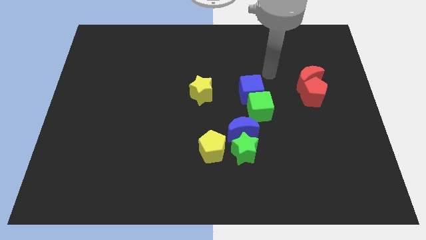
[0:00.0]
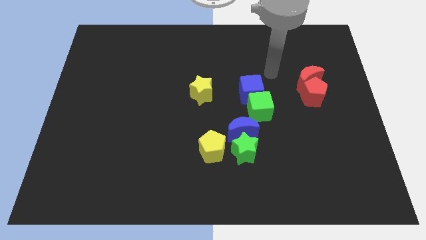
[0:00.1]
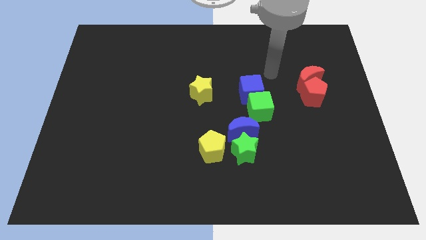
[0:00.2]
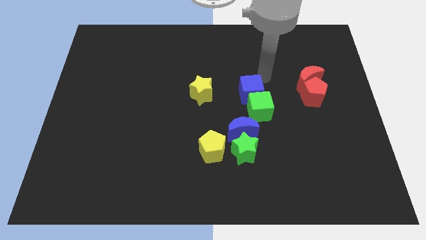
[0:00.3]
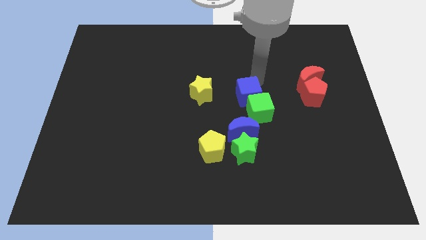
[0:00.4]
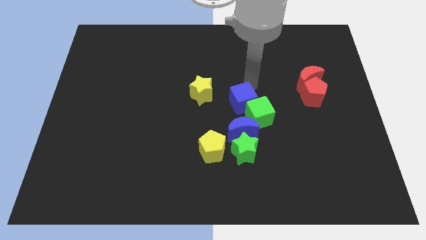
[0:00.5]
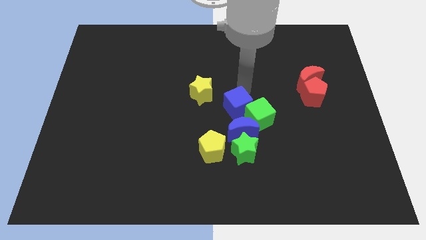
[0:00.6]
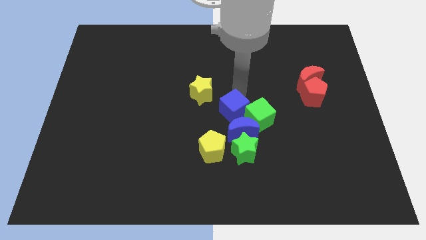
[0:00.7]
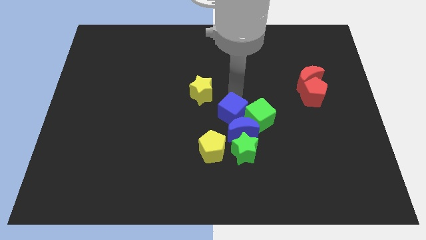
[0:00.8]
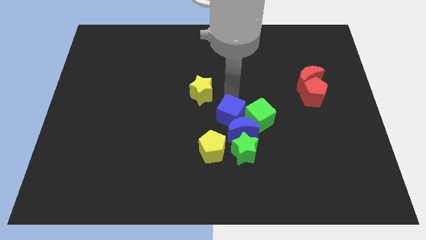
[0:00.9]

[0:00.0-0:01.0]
move the blue cube to the top of the blue crescent

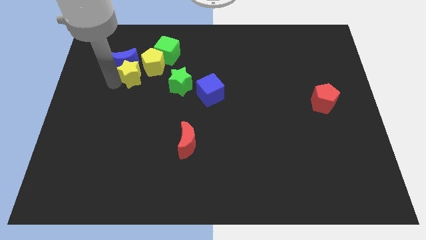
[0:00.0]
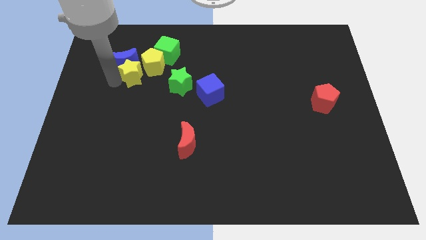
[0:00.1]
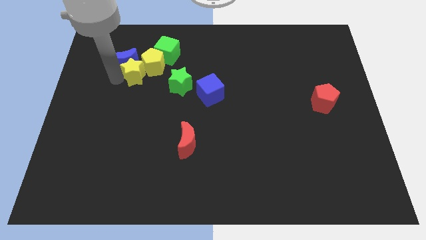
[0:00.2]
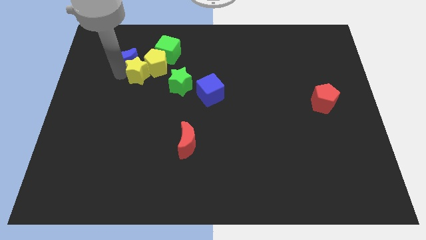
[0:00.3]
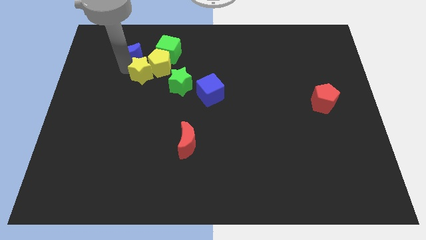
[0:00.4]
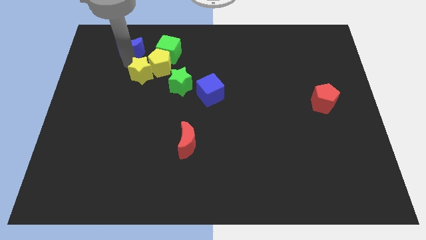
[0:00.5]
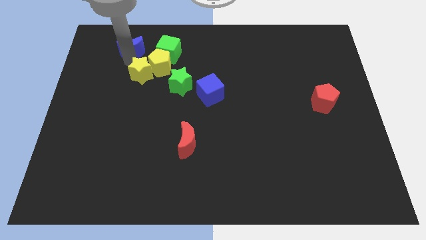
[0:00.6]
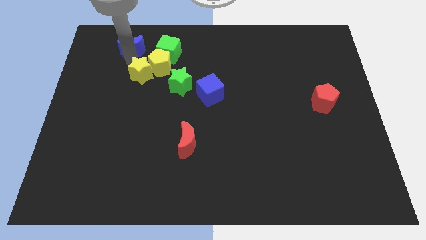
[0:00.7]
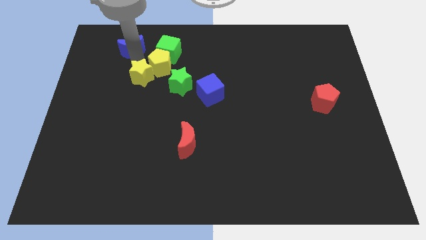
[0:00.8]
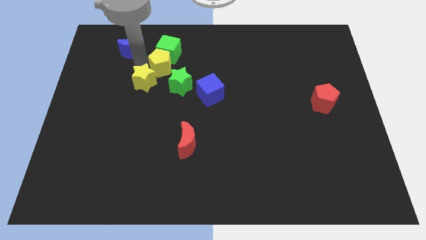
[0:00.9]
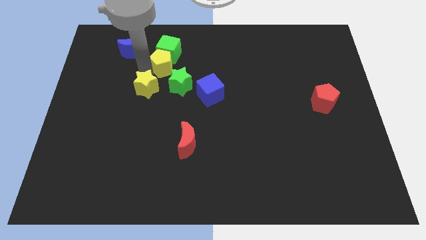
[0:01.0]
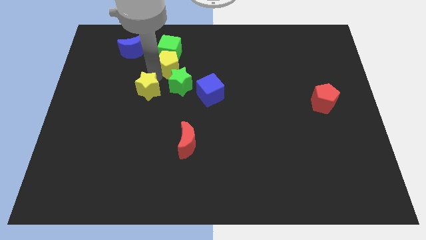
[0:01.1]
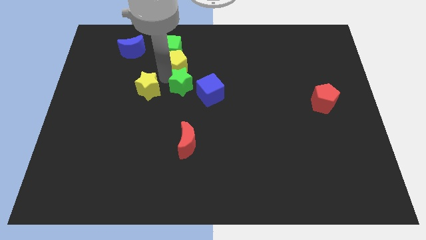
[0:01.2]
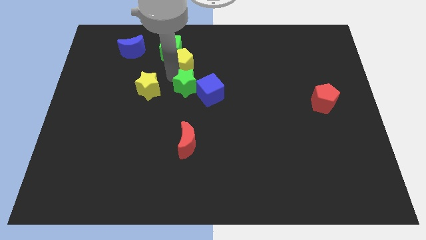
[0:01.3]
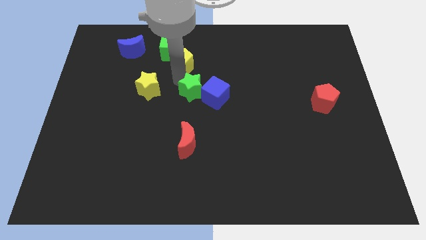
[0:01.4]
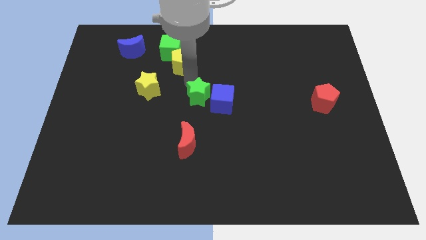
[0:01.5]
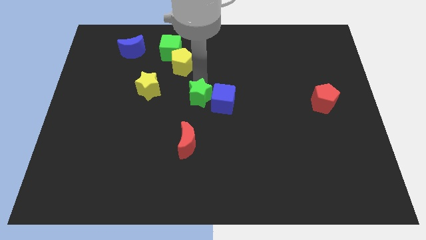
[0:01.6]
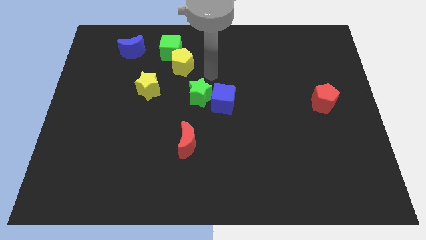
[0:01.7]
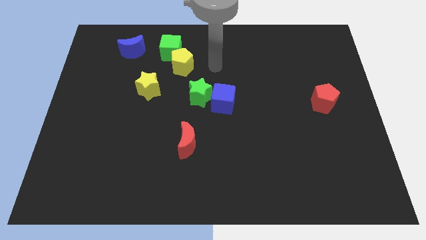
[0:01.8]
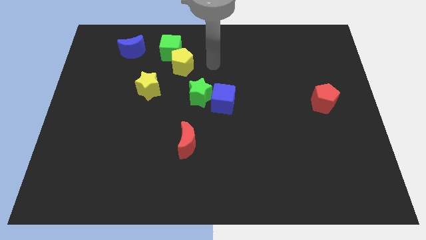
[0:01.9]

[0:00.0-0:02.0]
separate the yellow blocks and green star

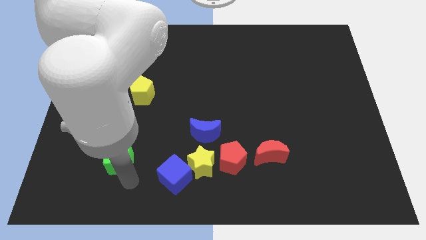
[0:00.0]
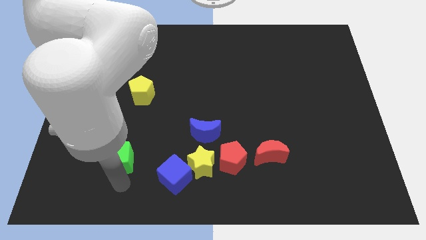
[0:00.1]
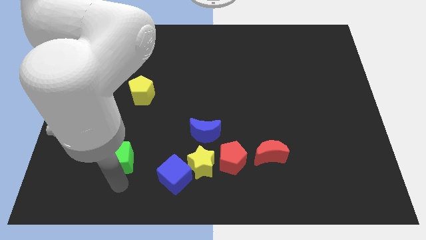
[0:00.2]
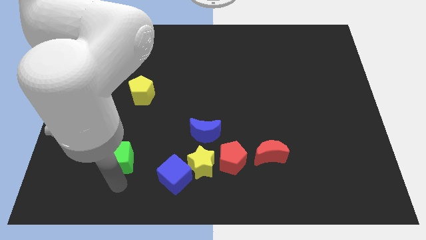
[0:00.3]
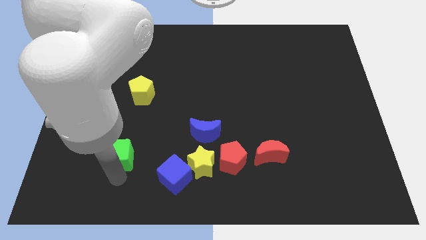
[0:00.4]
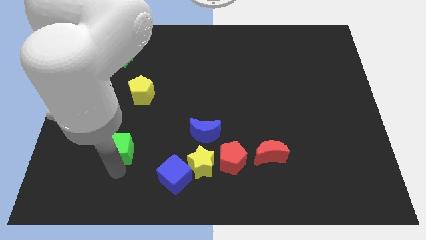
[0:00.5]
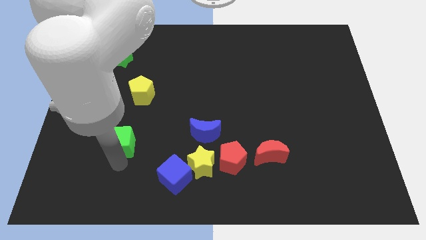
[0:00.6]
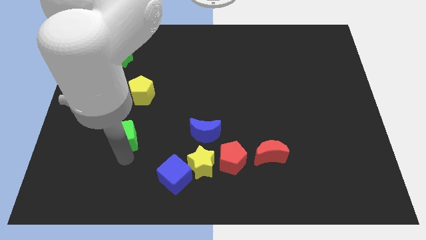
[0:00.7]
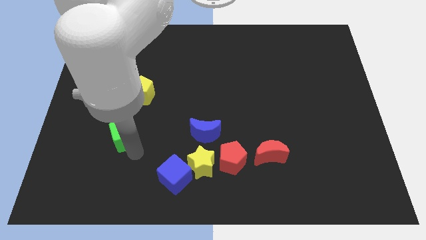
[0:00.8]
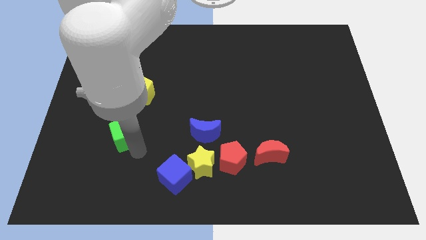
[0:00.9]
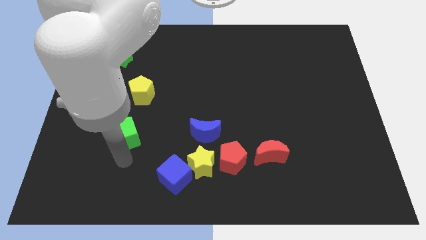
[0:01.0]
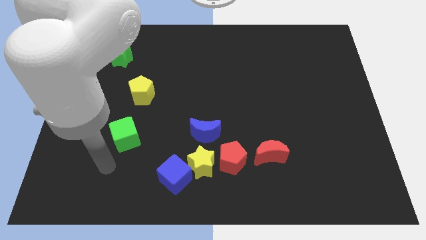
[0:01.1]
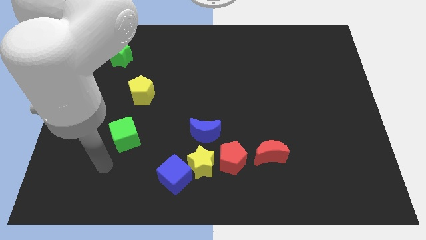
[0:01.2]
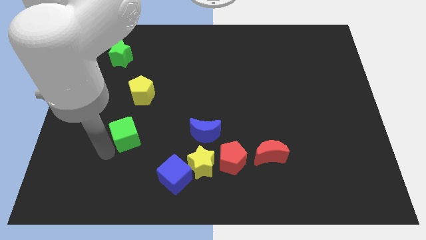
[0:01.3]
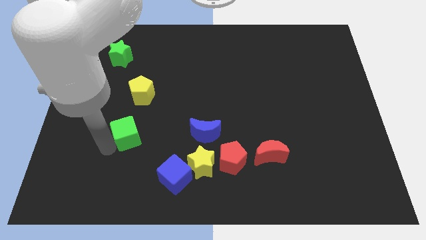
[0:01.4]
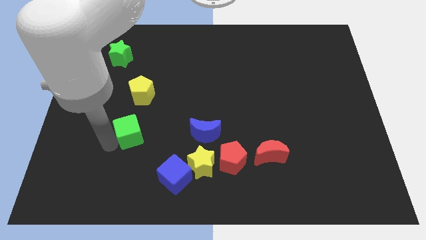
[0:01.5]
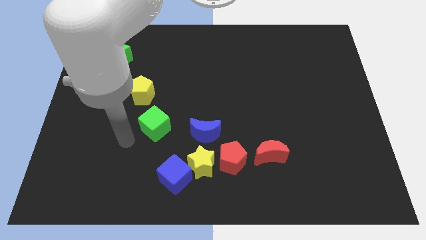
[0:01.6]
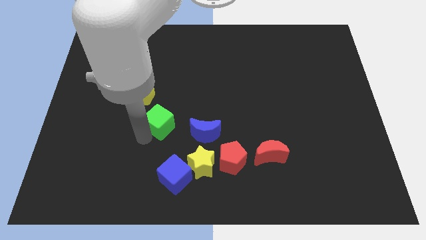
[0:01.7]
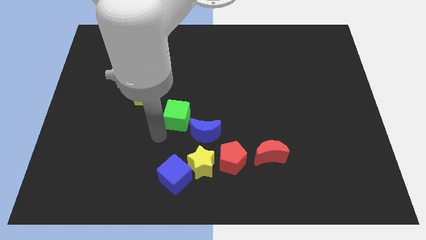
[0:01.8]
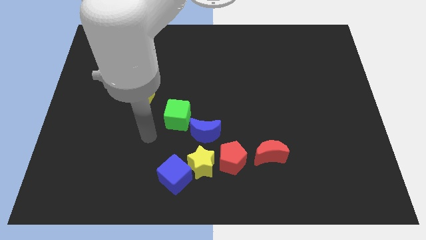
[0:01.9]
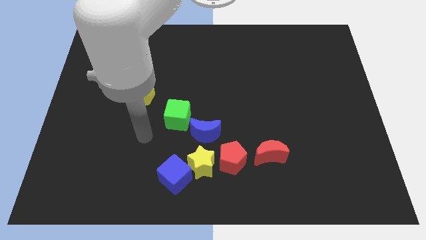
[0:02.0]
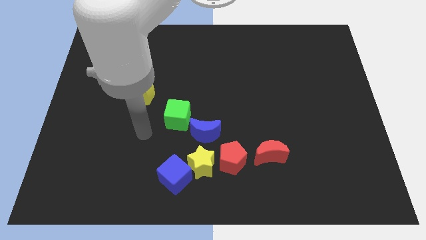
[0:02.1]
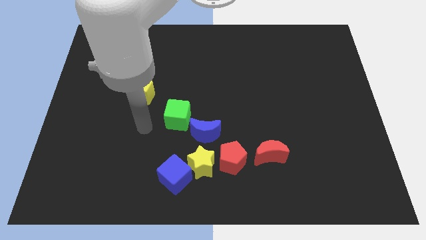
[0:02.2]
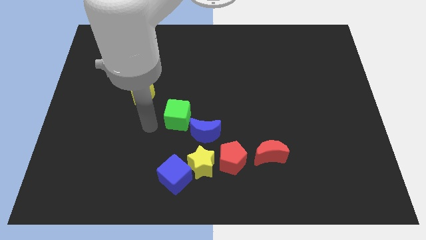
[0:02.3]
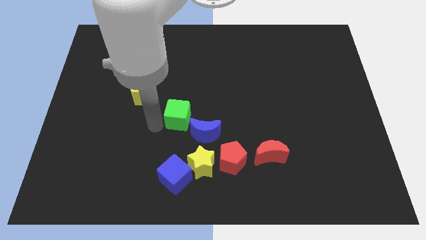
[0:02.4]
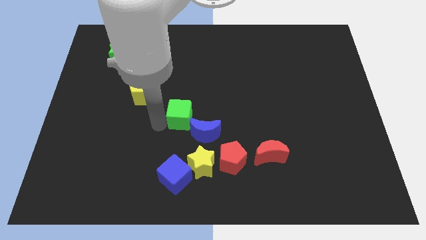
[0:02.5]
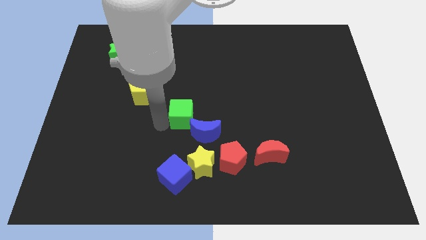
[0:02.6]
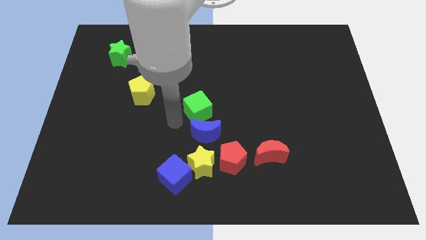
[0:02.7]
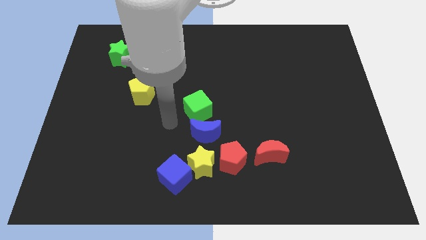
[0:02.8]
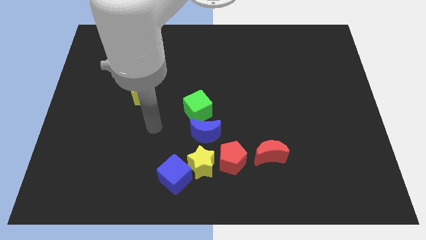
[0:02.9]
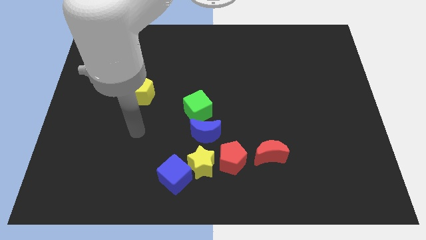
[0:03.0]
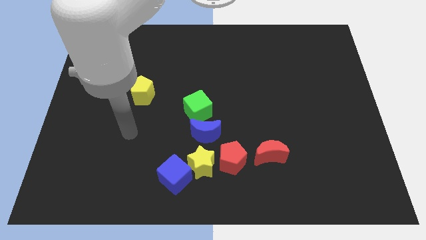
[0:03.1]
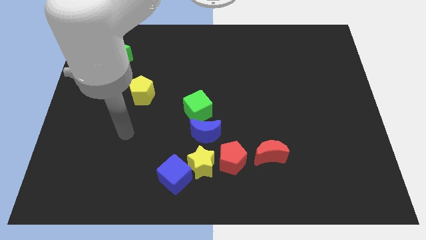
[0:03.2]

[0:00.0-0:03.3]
drag green cube above blue moon

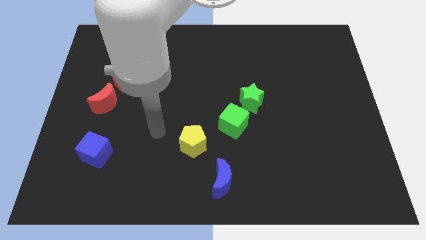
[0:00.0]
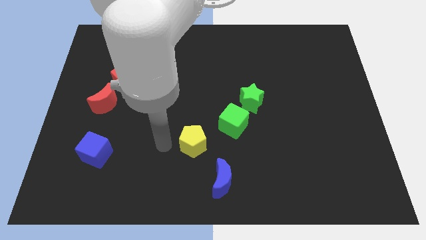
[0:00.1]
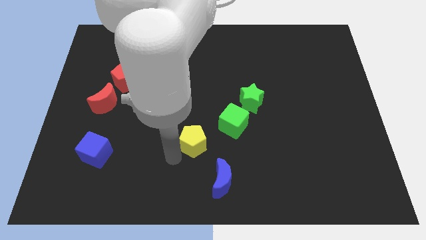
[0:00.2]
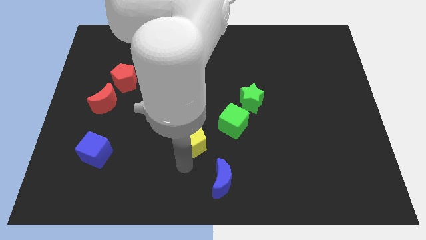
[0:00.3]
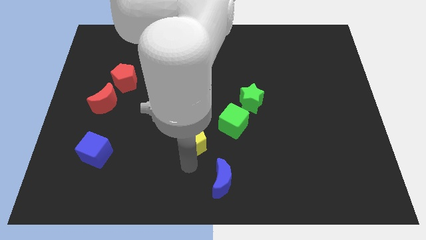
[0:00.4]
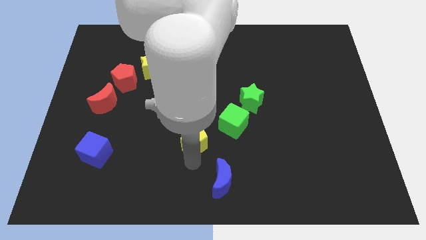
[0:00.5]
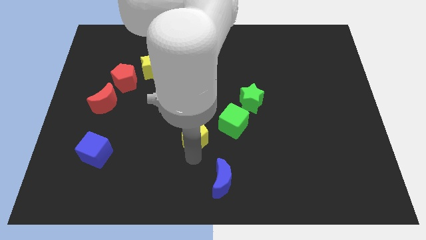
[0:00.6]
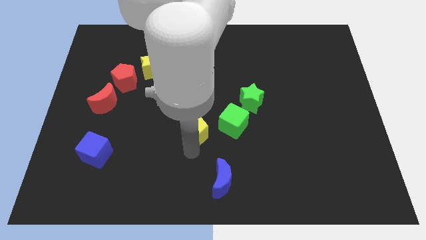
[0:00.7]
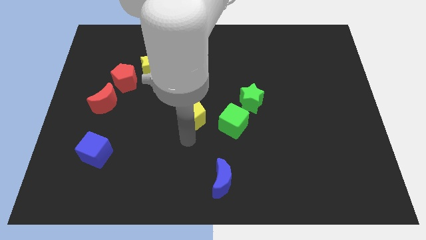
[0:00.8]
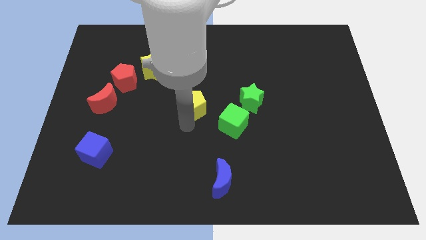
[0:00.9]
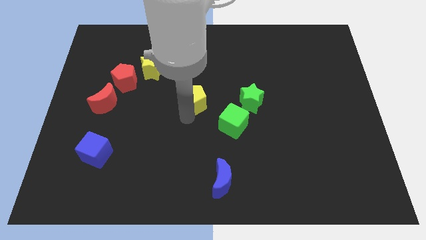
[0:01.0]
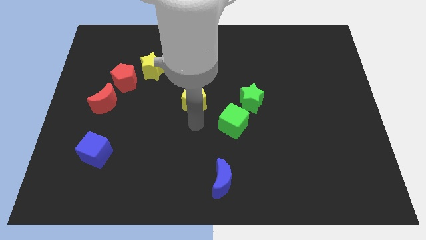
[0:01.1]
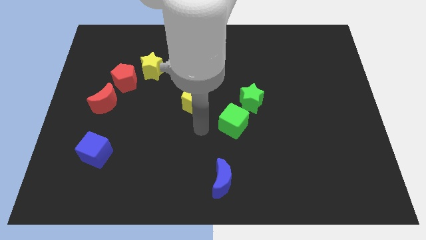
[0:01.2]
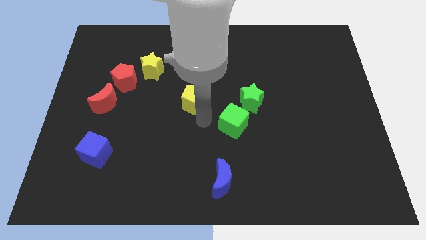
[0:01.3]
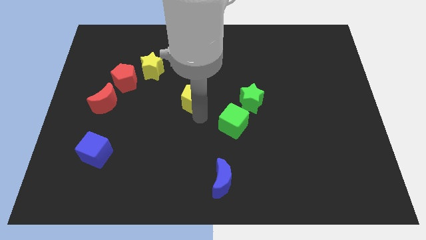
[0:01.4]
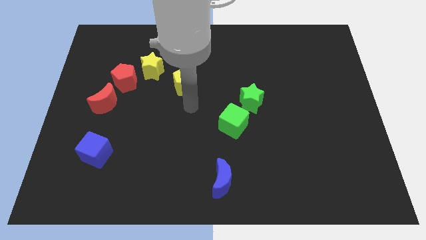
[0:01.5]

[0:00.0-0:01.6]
move yellow pentagon towards the yellow star

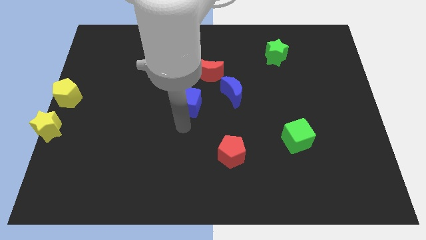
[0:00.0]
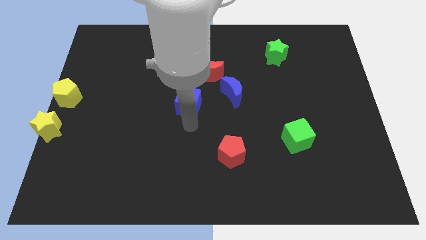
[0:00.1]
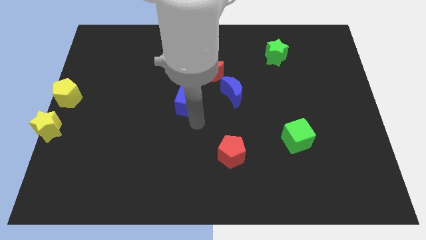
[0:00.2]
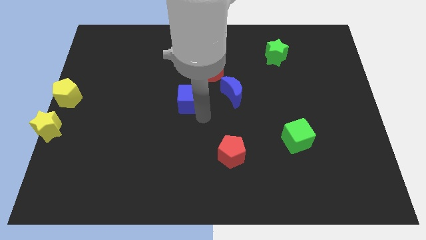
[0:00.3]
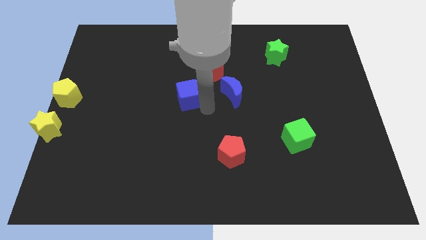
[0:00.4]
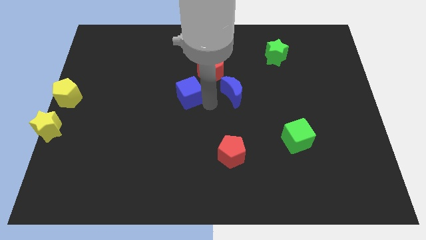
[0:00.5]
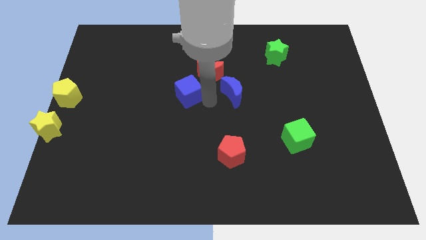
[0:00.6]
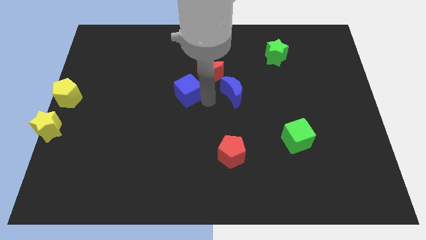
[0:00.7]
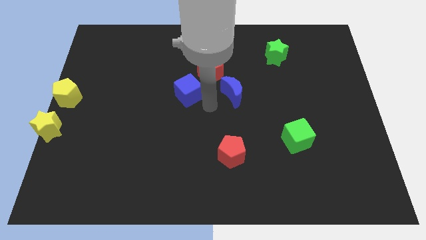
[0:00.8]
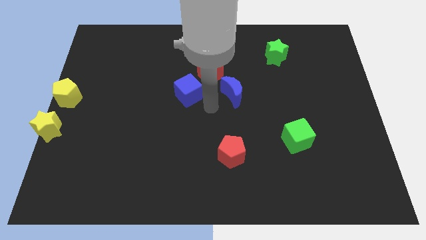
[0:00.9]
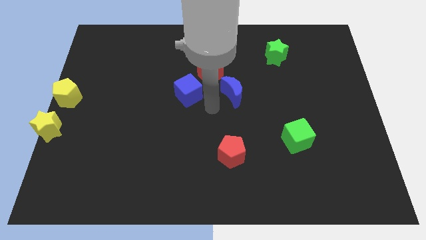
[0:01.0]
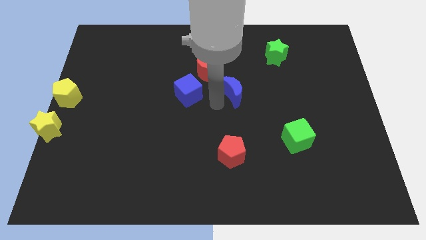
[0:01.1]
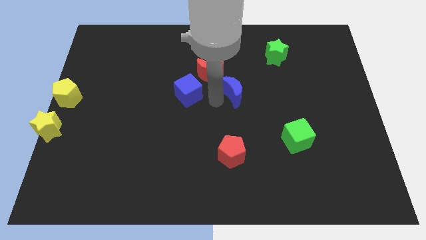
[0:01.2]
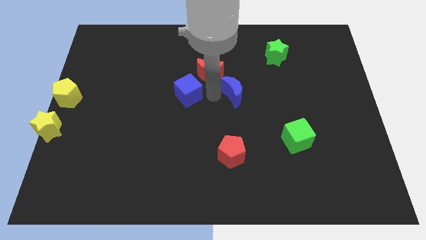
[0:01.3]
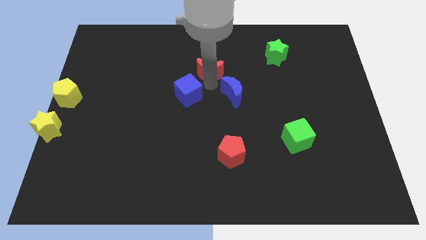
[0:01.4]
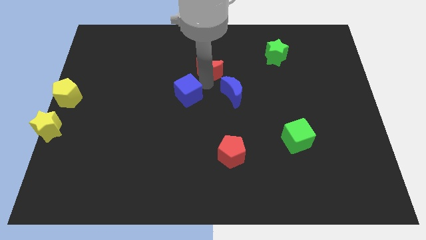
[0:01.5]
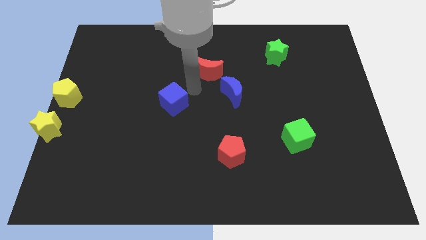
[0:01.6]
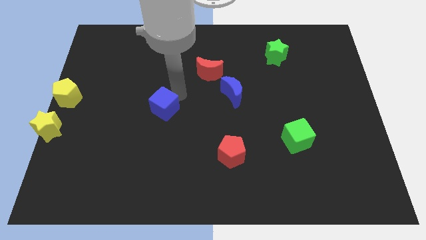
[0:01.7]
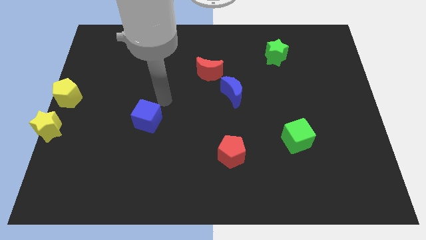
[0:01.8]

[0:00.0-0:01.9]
move the blue cube towards yellow star
